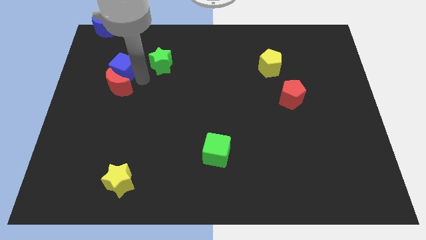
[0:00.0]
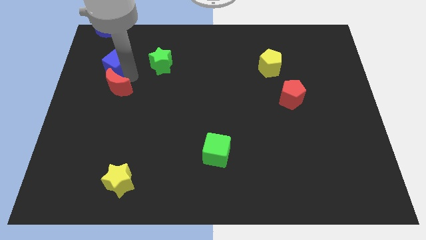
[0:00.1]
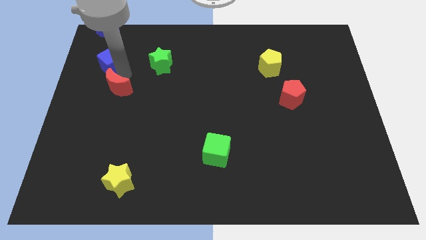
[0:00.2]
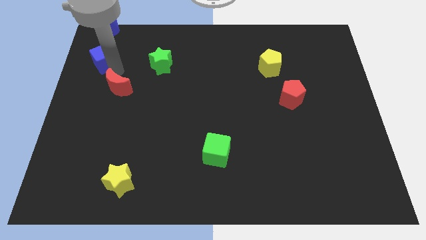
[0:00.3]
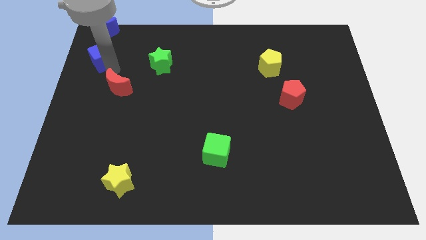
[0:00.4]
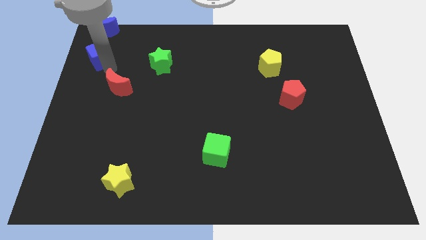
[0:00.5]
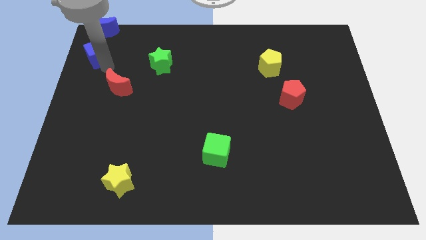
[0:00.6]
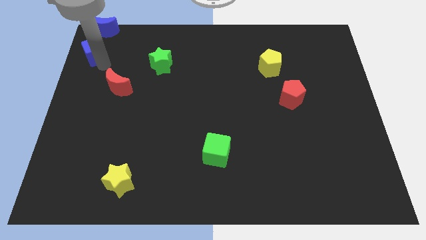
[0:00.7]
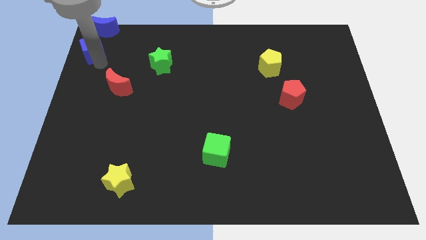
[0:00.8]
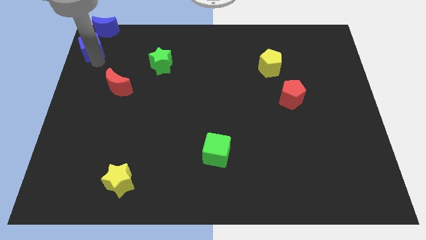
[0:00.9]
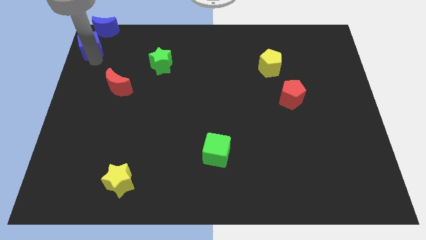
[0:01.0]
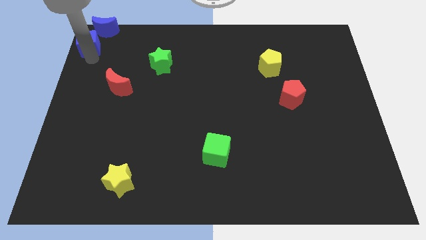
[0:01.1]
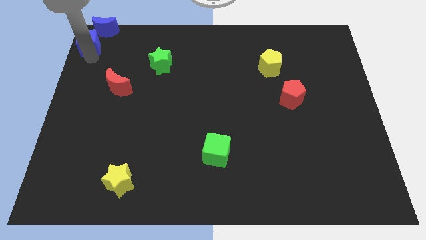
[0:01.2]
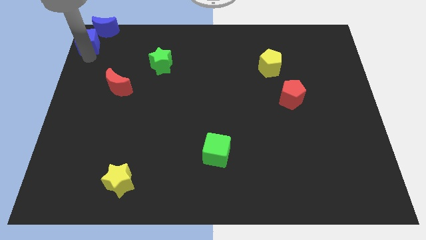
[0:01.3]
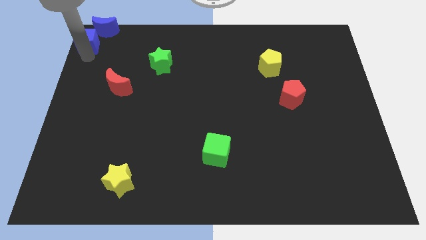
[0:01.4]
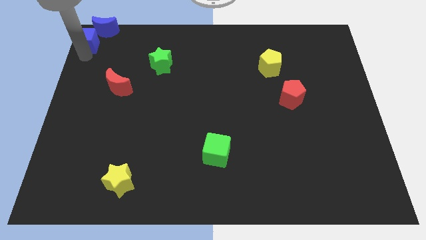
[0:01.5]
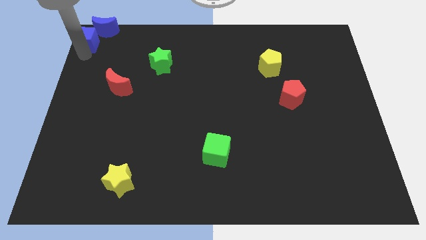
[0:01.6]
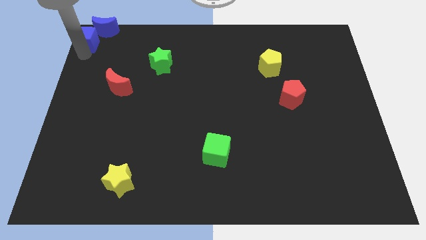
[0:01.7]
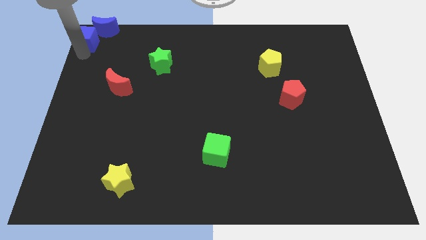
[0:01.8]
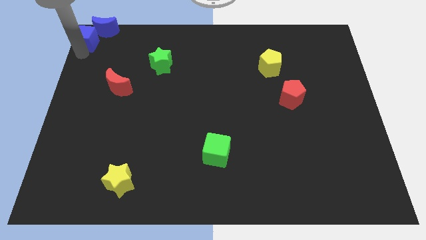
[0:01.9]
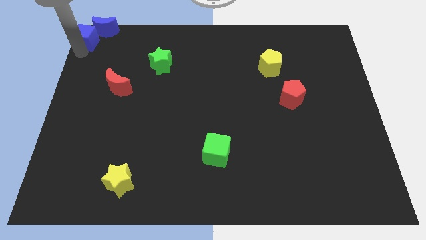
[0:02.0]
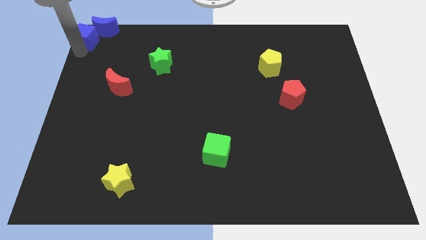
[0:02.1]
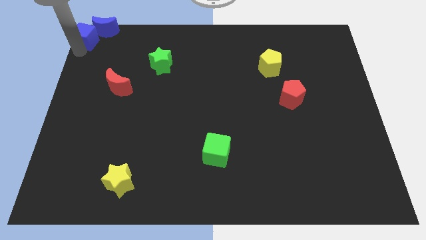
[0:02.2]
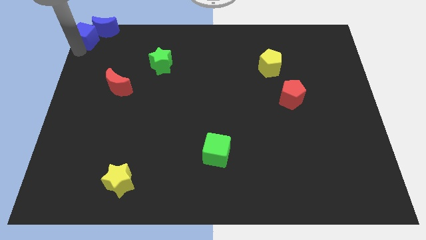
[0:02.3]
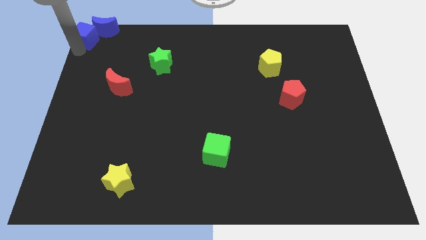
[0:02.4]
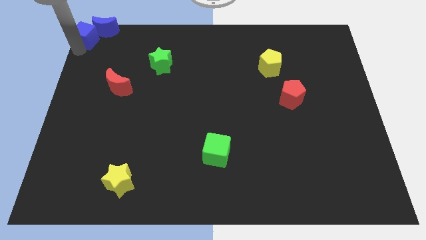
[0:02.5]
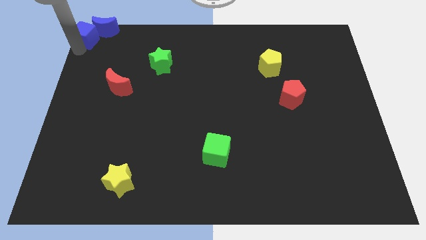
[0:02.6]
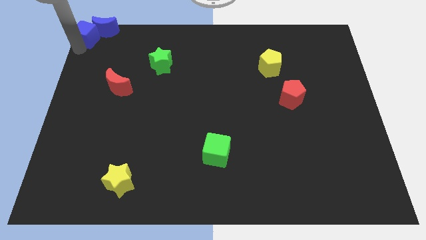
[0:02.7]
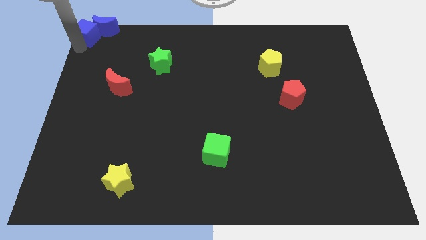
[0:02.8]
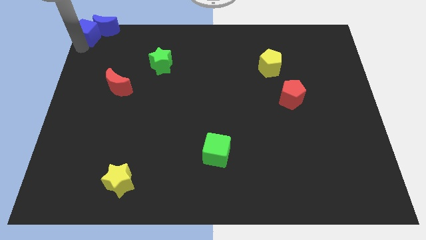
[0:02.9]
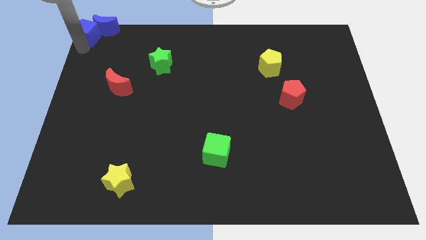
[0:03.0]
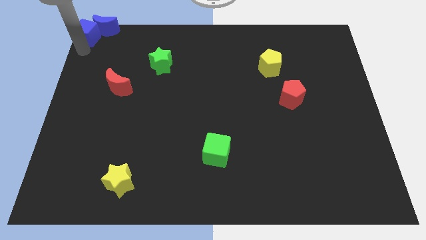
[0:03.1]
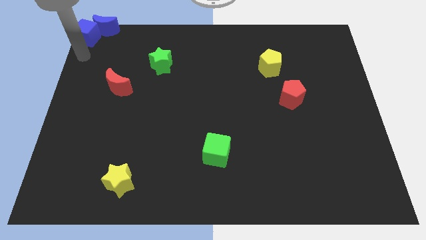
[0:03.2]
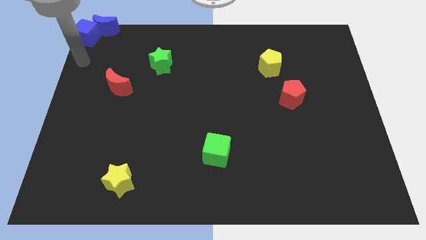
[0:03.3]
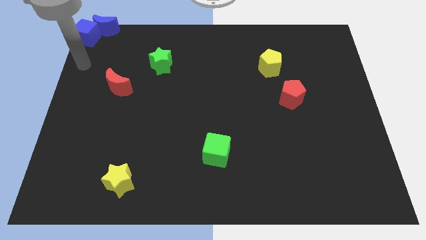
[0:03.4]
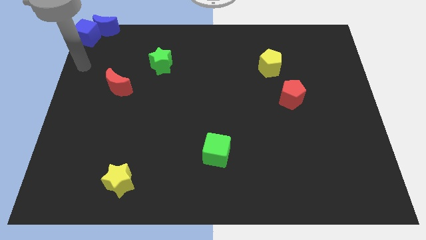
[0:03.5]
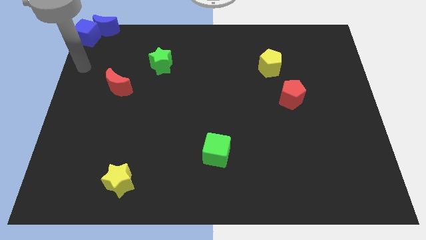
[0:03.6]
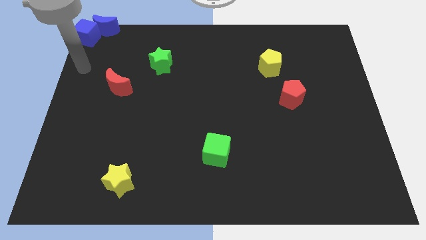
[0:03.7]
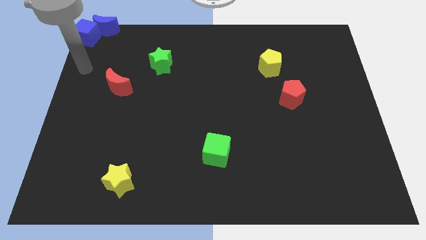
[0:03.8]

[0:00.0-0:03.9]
move the blue cube into the blue crescent

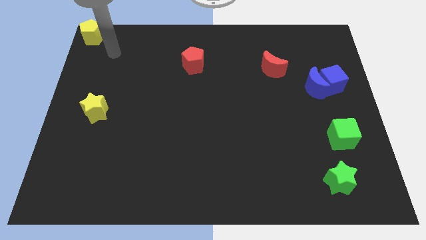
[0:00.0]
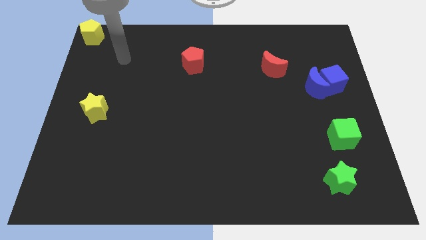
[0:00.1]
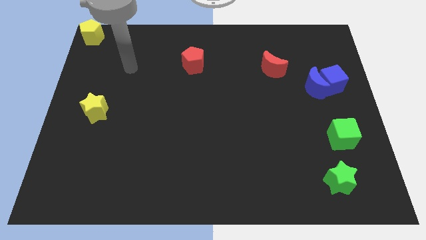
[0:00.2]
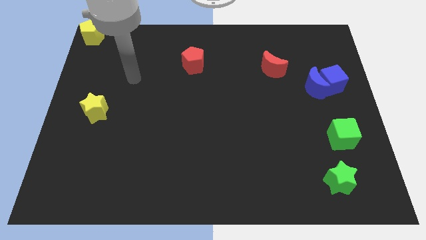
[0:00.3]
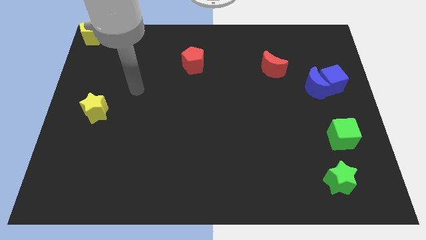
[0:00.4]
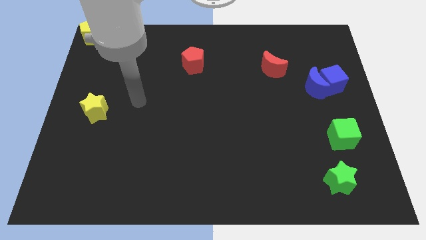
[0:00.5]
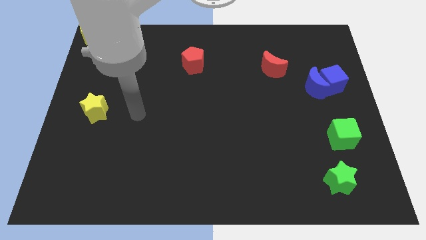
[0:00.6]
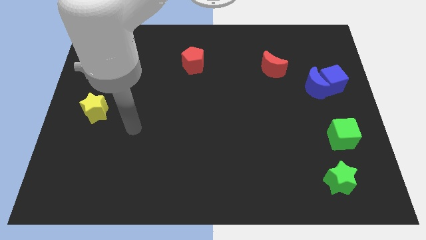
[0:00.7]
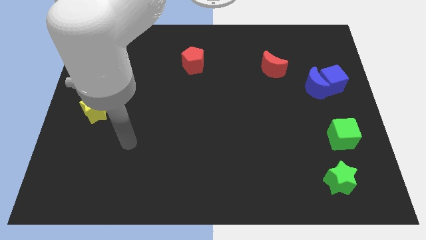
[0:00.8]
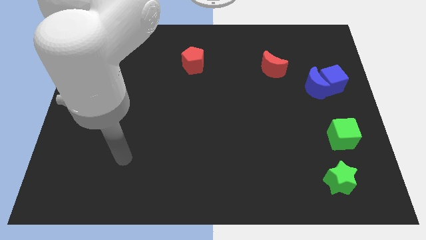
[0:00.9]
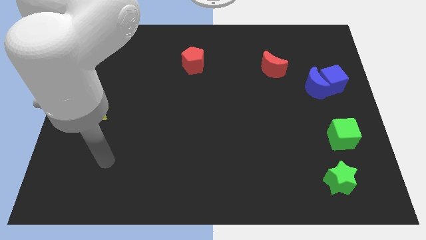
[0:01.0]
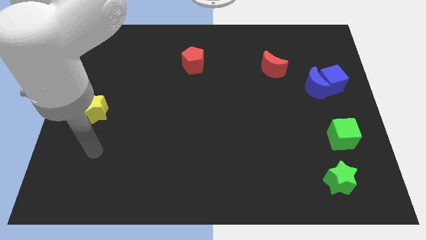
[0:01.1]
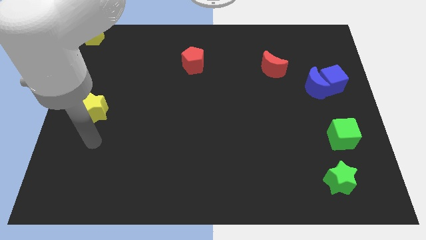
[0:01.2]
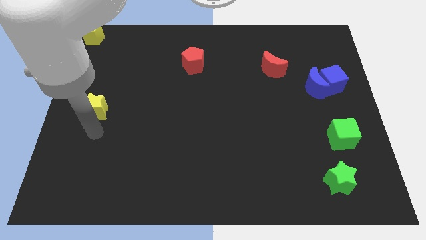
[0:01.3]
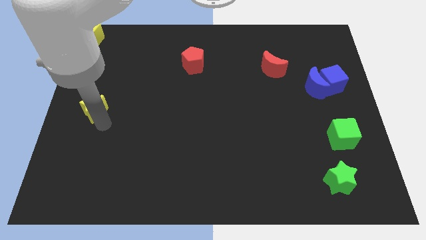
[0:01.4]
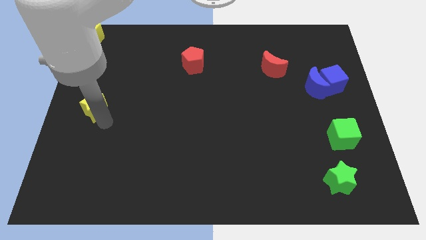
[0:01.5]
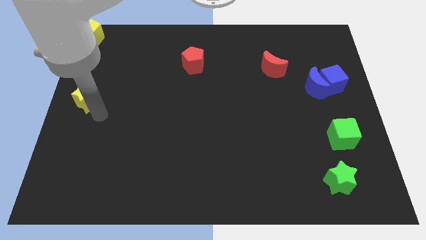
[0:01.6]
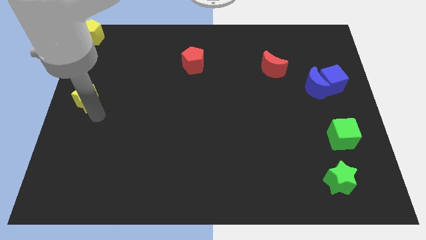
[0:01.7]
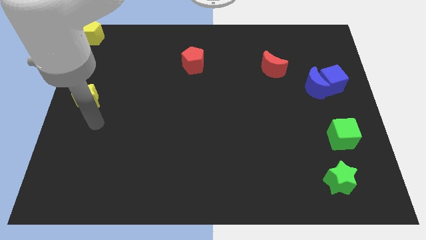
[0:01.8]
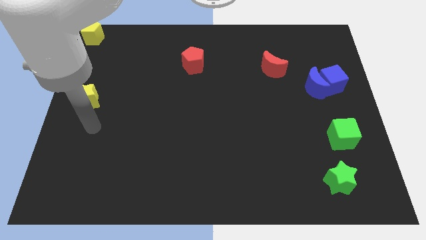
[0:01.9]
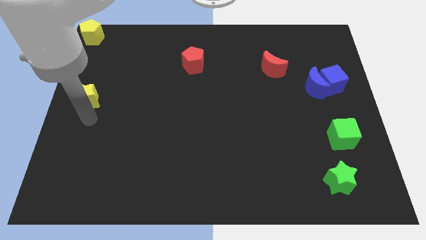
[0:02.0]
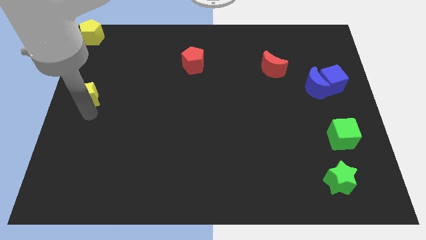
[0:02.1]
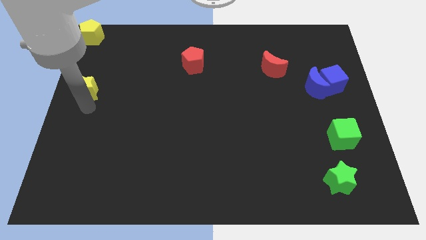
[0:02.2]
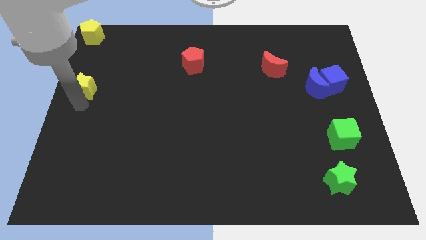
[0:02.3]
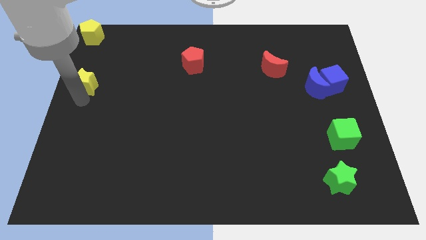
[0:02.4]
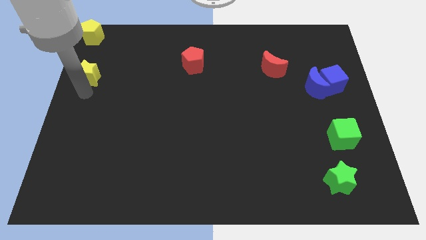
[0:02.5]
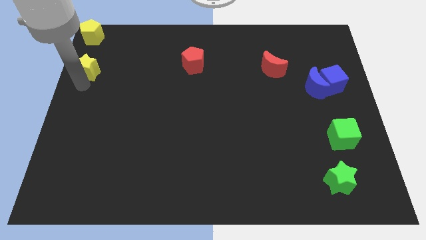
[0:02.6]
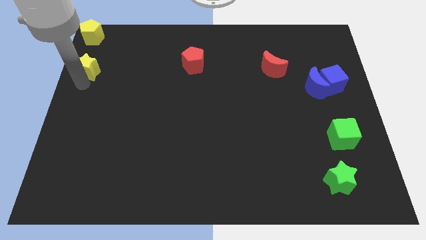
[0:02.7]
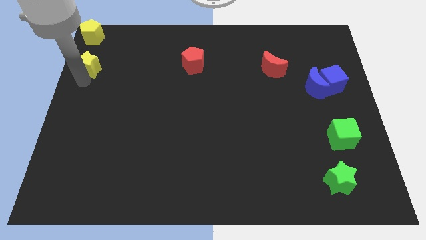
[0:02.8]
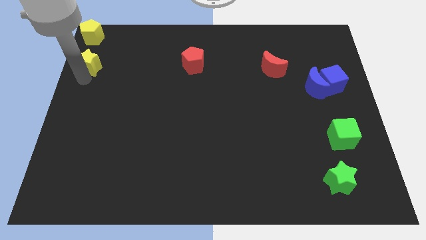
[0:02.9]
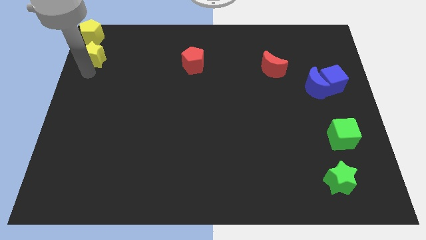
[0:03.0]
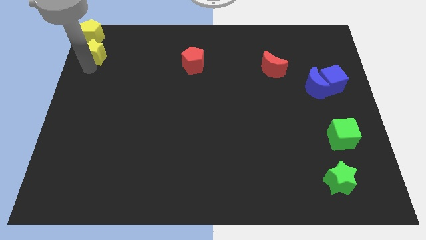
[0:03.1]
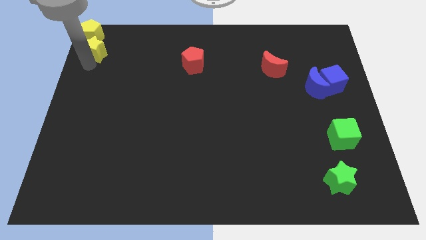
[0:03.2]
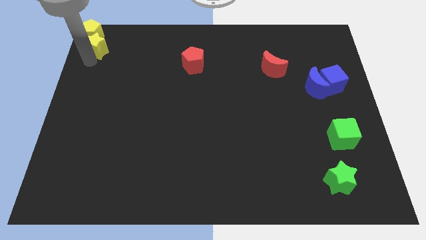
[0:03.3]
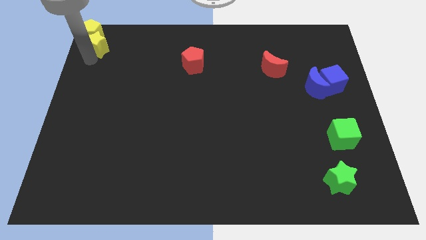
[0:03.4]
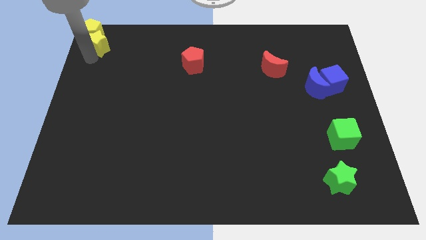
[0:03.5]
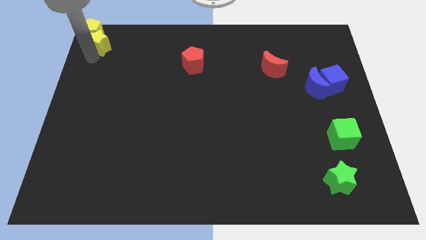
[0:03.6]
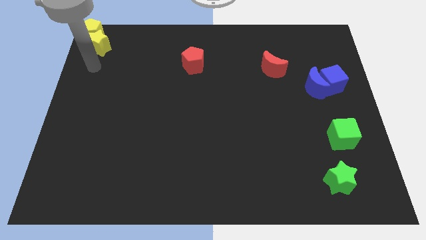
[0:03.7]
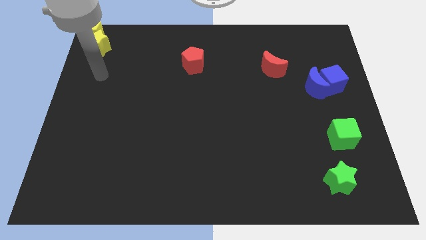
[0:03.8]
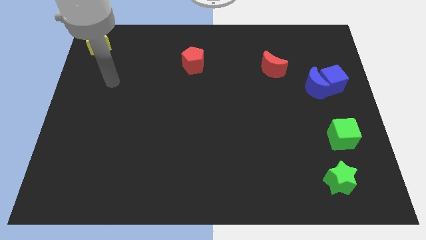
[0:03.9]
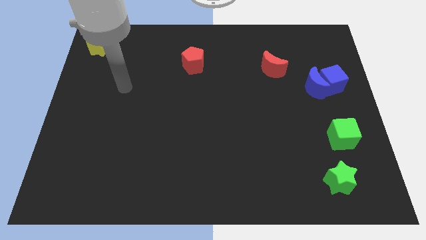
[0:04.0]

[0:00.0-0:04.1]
move the yellow star into the yellow pentagon

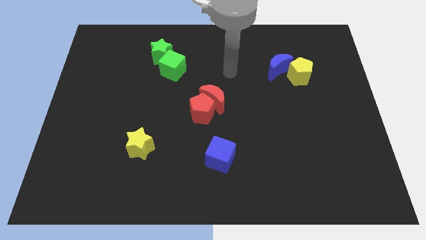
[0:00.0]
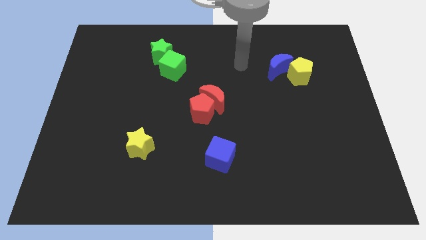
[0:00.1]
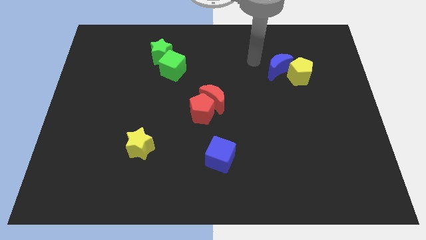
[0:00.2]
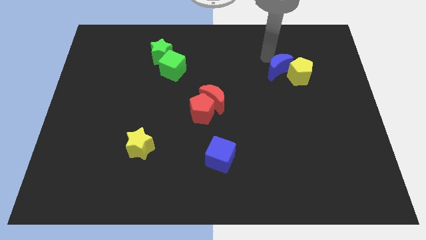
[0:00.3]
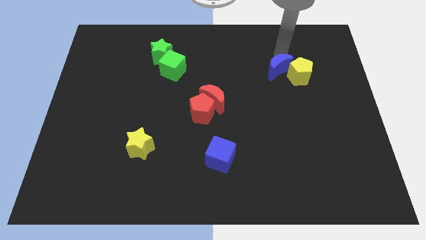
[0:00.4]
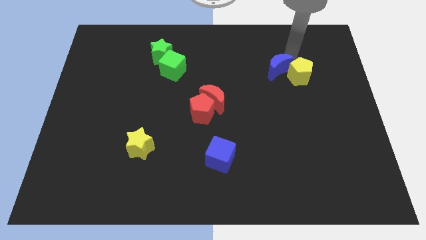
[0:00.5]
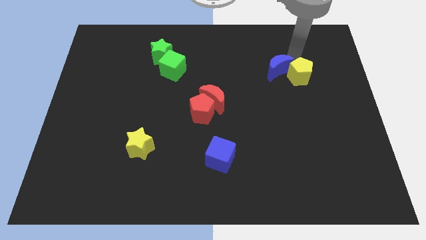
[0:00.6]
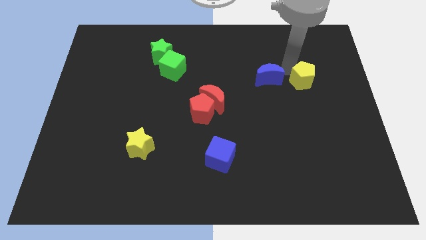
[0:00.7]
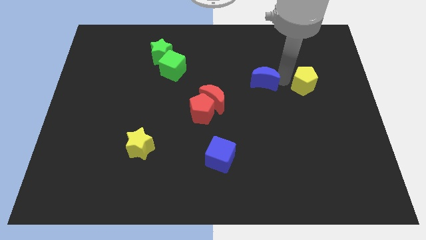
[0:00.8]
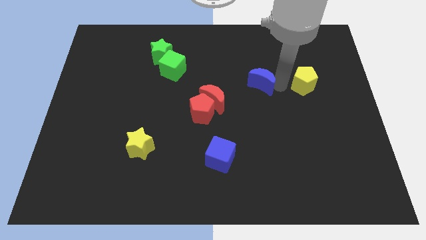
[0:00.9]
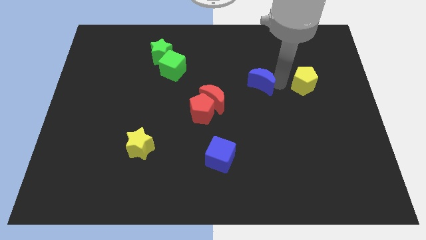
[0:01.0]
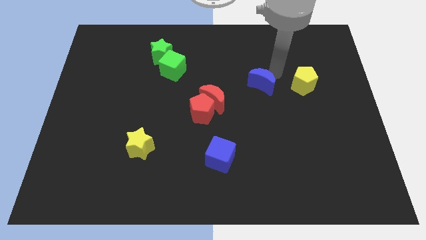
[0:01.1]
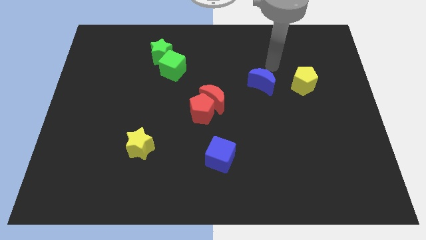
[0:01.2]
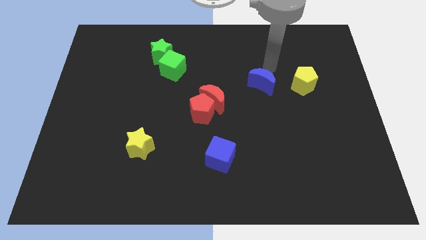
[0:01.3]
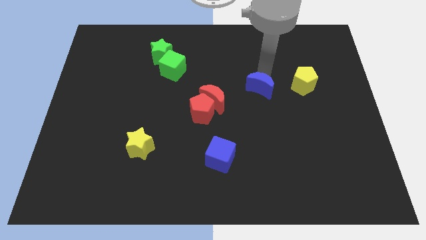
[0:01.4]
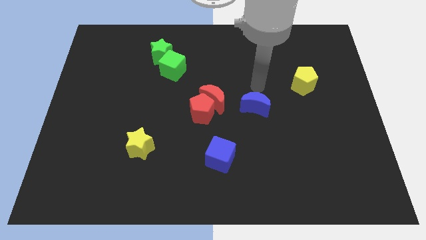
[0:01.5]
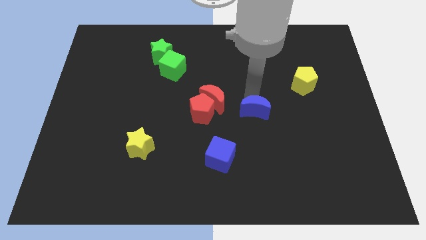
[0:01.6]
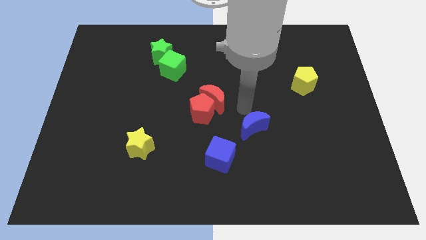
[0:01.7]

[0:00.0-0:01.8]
push the blue crescent horigontal to the red pentagon on the right side
